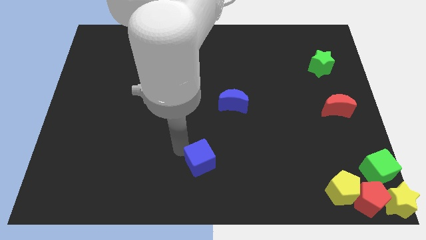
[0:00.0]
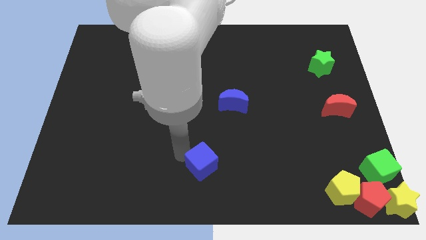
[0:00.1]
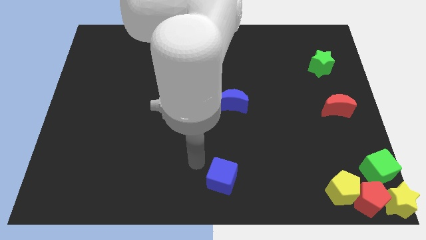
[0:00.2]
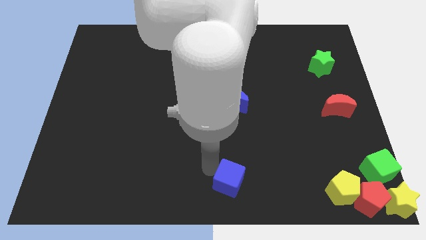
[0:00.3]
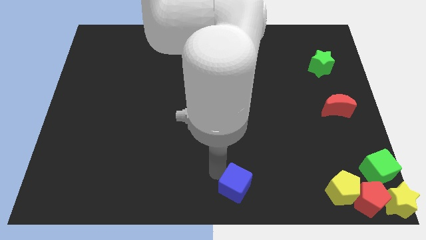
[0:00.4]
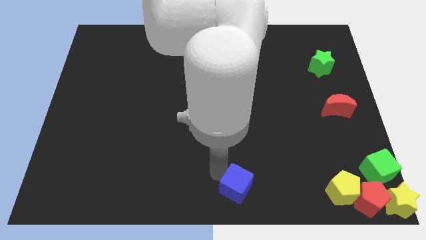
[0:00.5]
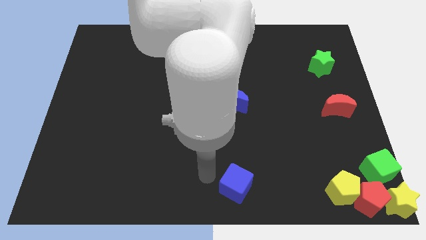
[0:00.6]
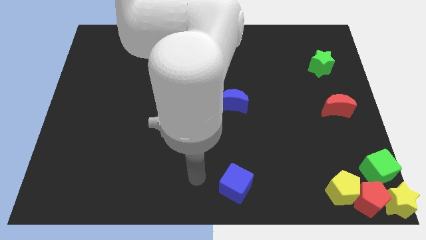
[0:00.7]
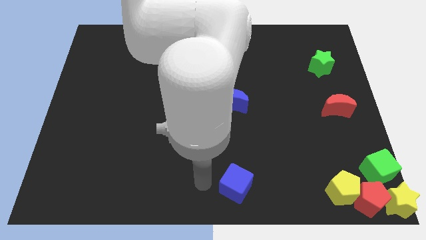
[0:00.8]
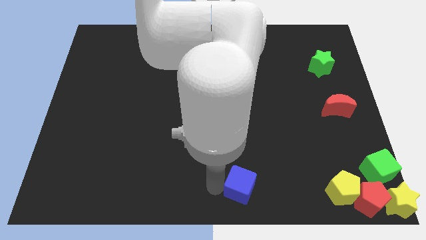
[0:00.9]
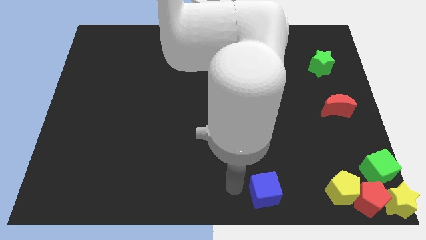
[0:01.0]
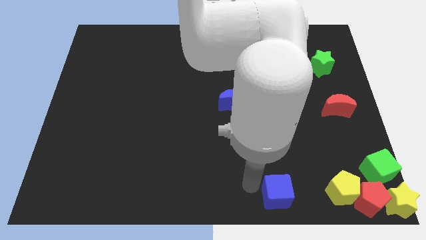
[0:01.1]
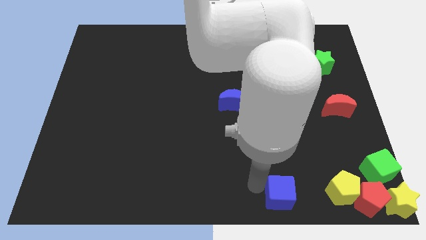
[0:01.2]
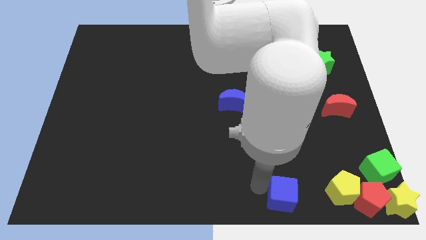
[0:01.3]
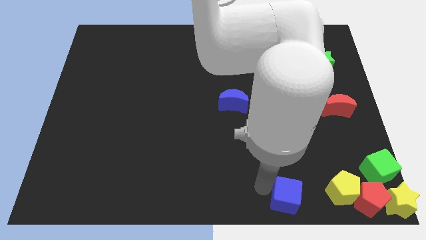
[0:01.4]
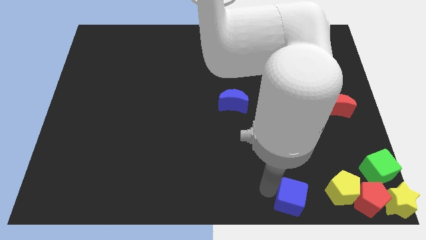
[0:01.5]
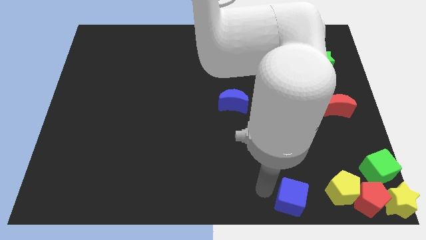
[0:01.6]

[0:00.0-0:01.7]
push the blue cube close to the yellow pentagon

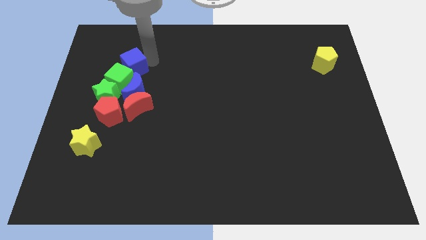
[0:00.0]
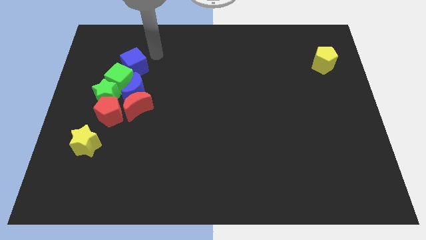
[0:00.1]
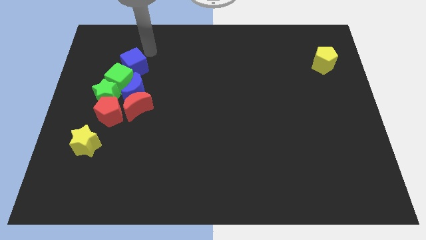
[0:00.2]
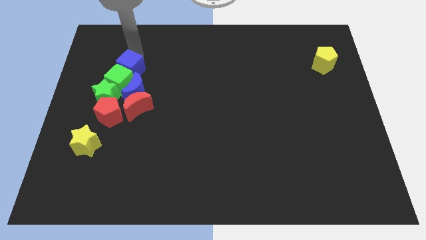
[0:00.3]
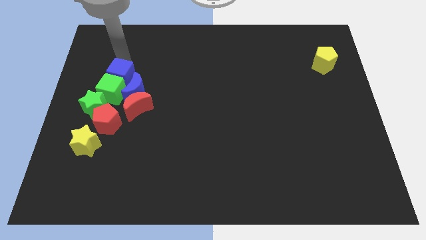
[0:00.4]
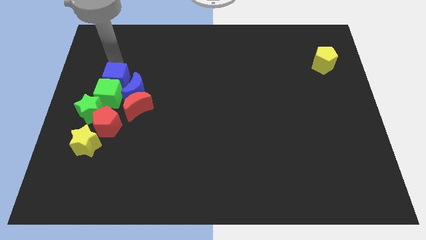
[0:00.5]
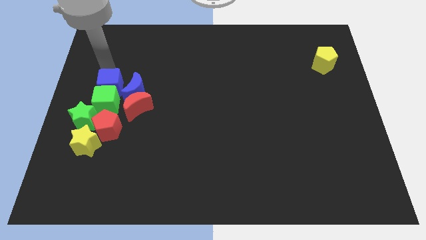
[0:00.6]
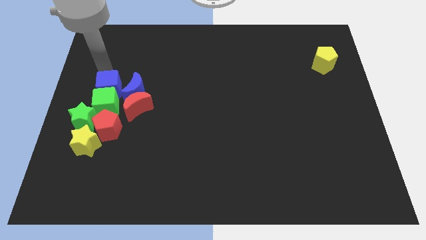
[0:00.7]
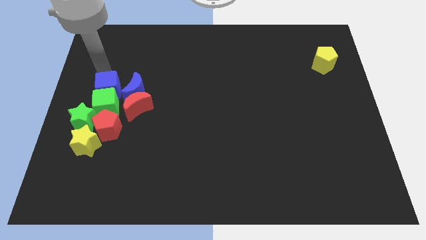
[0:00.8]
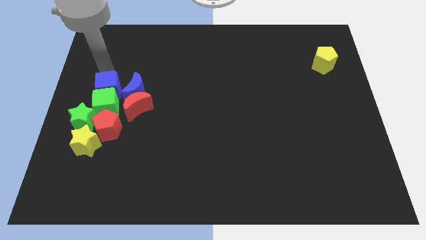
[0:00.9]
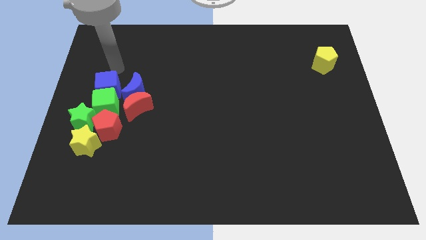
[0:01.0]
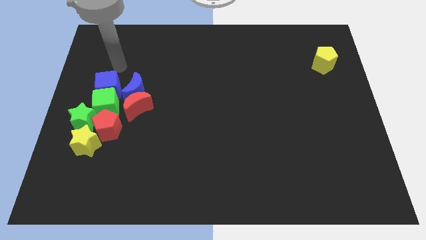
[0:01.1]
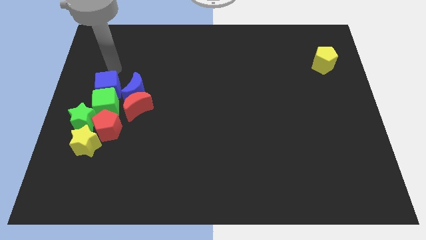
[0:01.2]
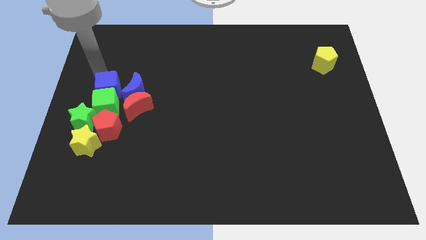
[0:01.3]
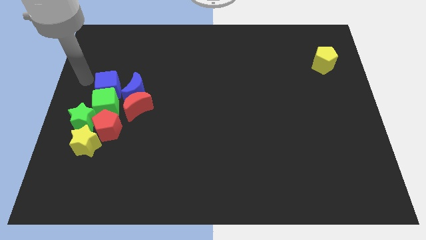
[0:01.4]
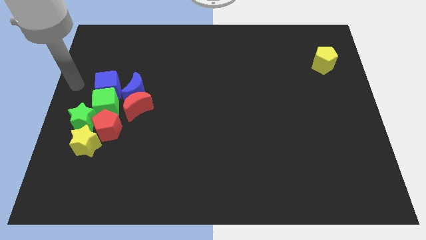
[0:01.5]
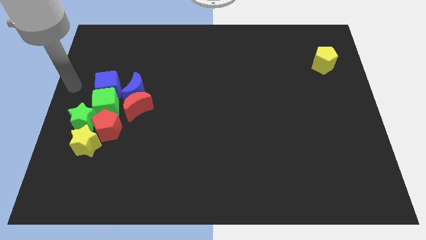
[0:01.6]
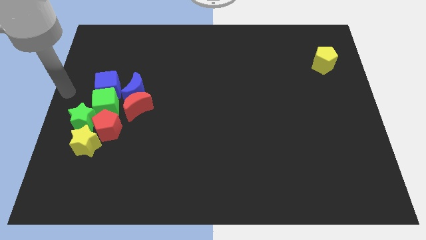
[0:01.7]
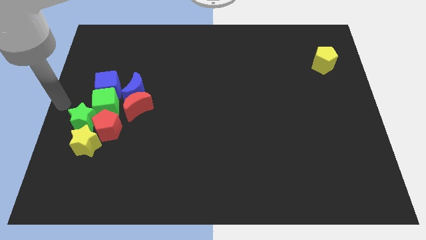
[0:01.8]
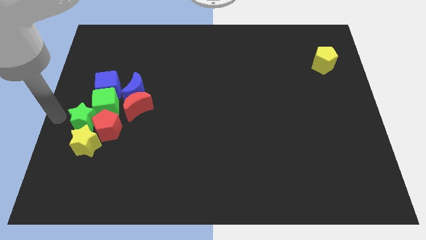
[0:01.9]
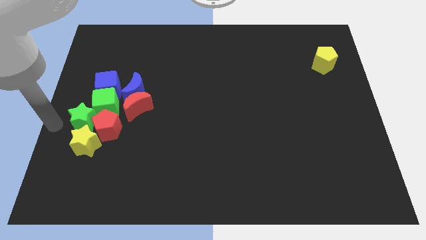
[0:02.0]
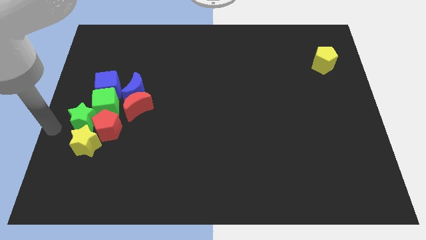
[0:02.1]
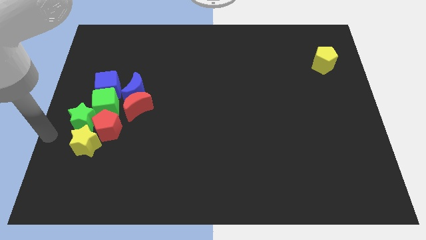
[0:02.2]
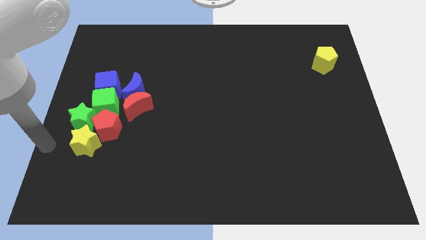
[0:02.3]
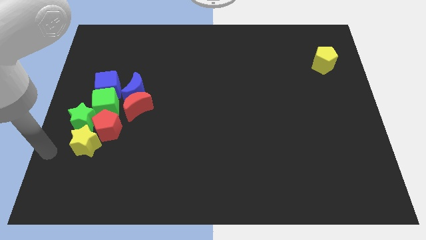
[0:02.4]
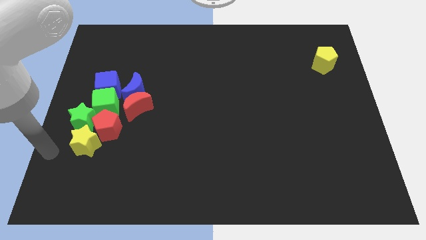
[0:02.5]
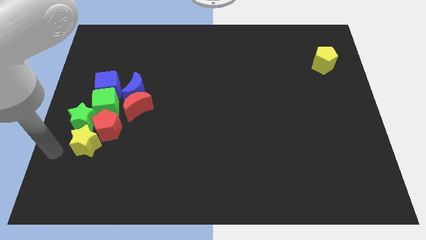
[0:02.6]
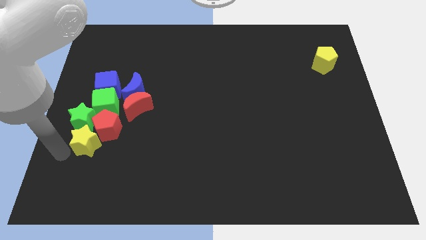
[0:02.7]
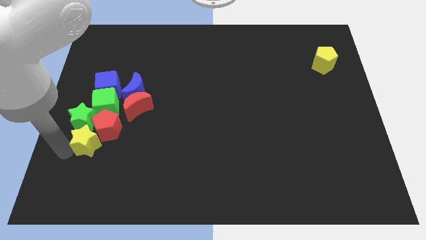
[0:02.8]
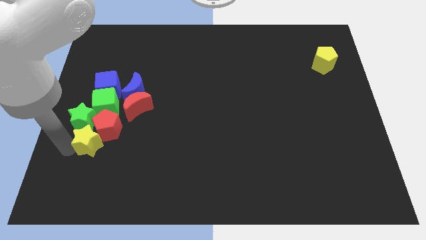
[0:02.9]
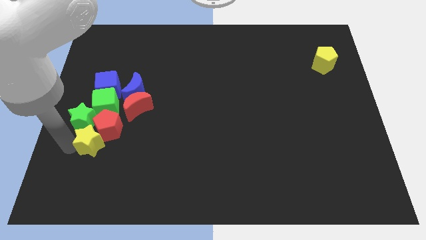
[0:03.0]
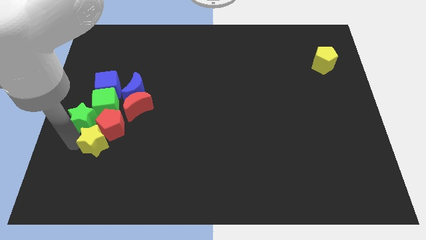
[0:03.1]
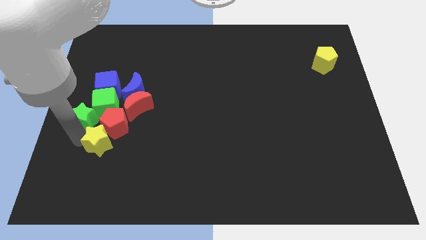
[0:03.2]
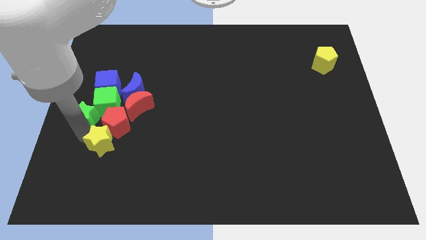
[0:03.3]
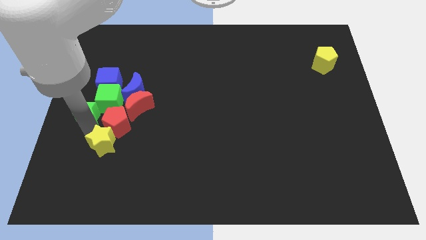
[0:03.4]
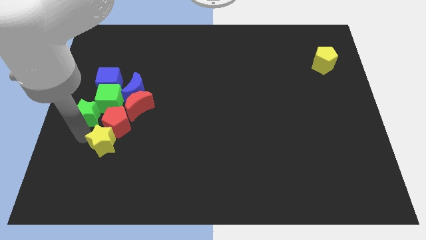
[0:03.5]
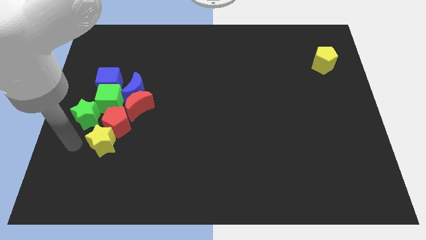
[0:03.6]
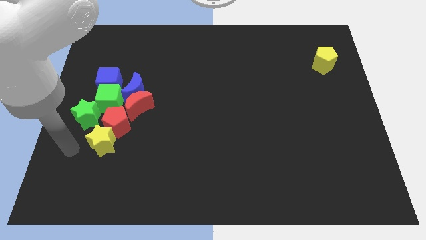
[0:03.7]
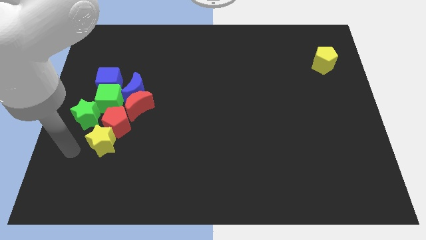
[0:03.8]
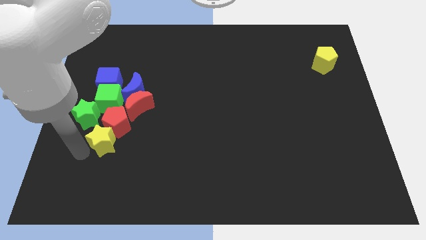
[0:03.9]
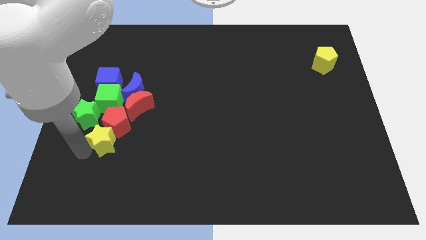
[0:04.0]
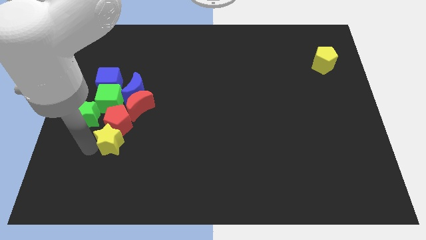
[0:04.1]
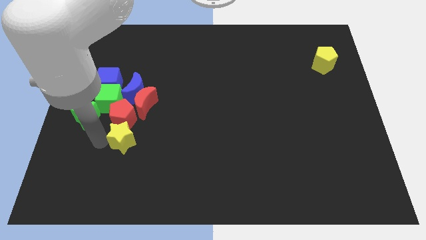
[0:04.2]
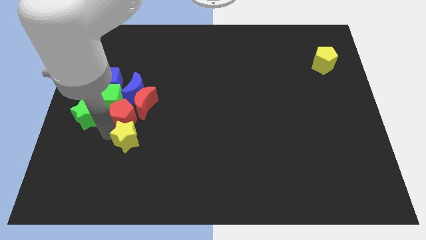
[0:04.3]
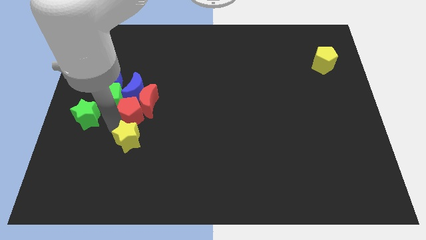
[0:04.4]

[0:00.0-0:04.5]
group up the all the blocks at the left side of the table except the yellow pentagon

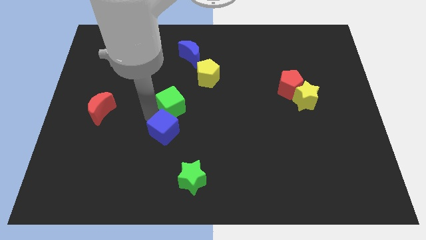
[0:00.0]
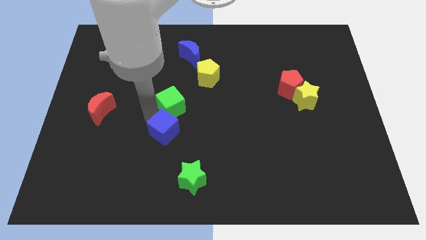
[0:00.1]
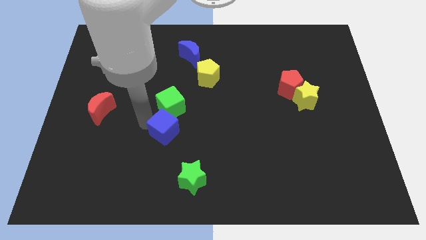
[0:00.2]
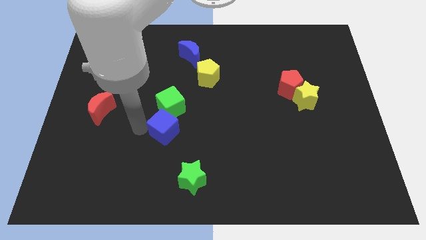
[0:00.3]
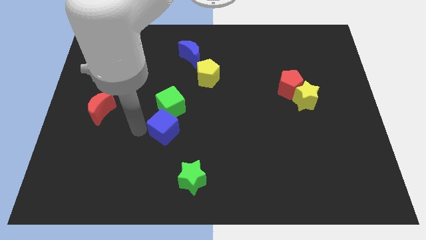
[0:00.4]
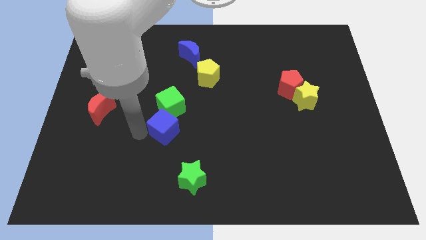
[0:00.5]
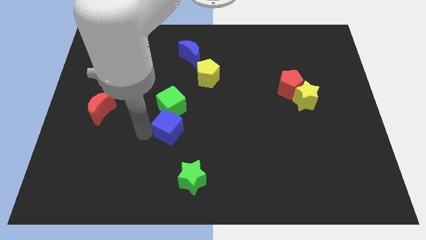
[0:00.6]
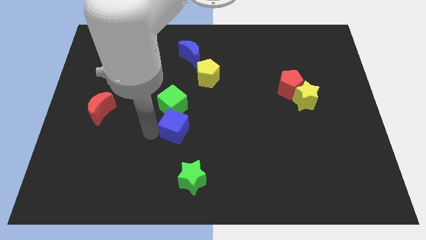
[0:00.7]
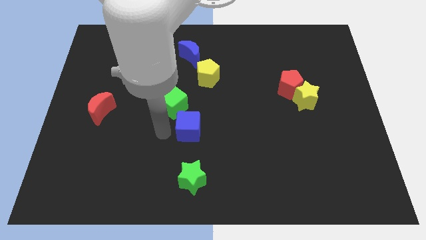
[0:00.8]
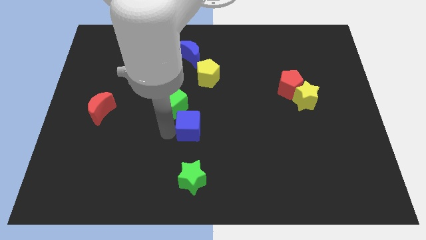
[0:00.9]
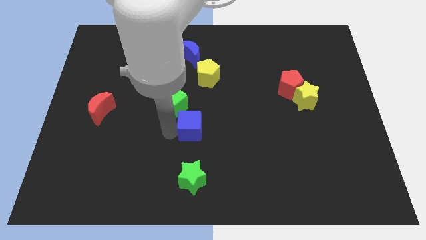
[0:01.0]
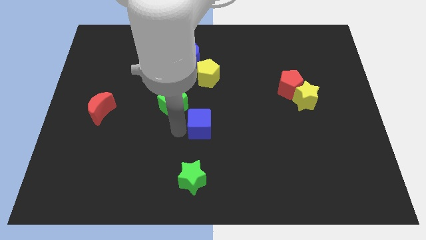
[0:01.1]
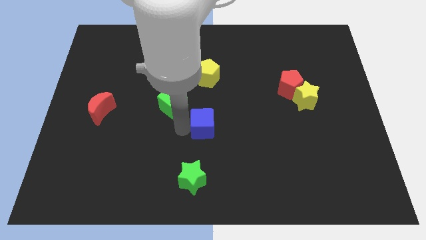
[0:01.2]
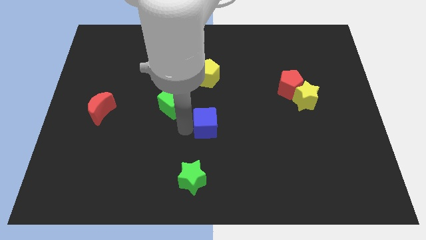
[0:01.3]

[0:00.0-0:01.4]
separate the blue cube from the green cube

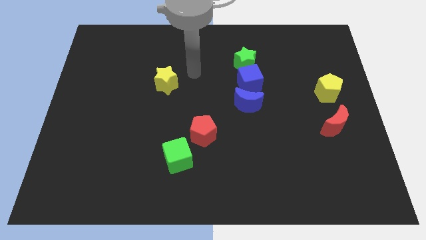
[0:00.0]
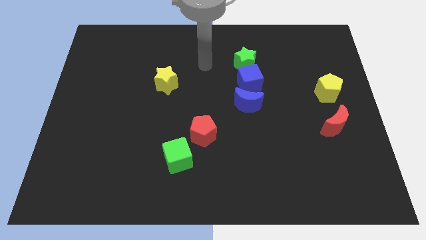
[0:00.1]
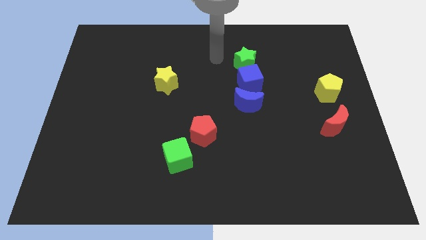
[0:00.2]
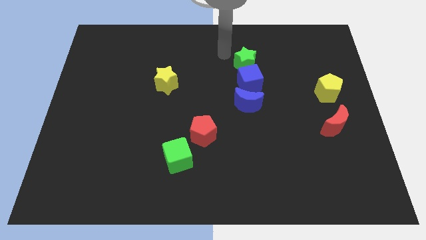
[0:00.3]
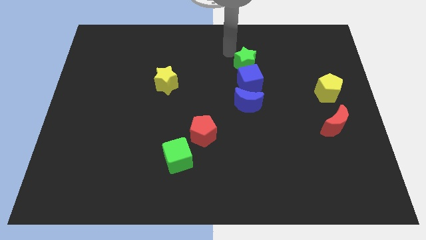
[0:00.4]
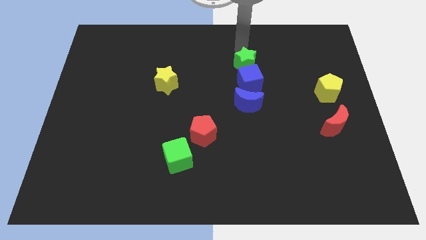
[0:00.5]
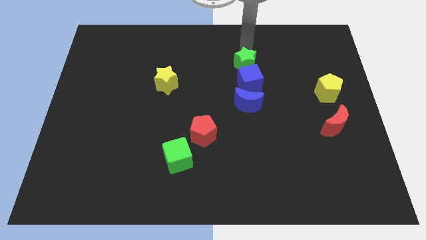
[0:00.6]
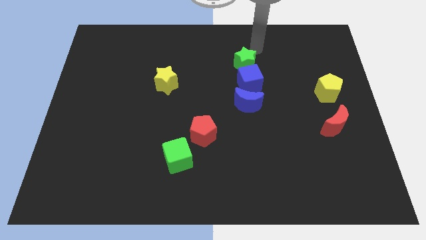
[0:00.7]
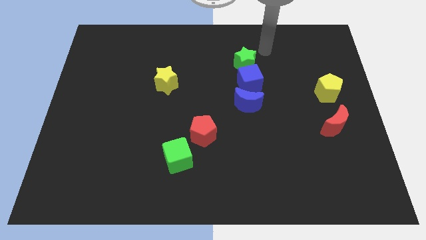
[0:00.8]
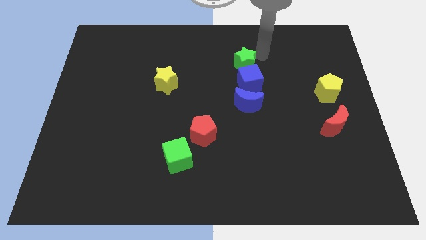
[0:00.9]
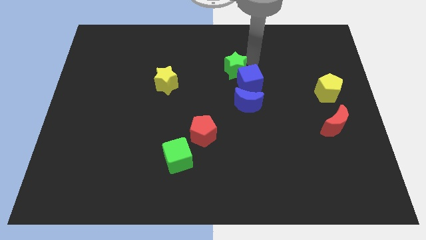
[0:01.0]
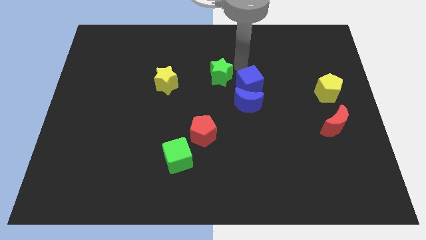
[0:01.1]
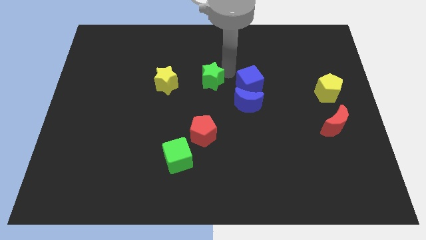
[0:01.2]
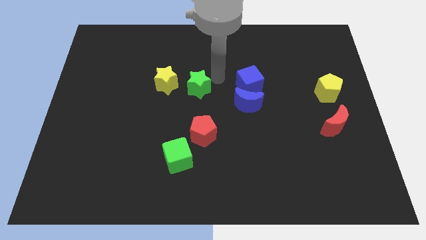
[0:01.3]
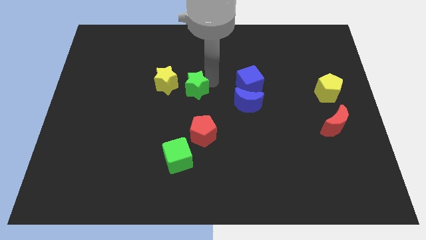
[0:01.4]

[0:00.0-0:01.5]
place the green star to the right of the yellow star
